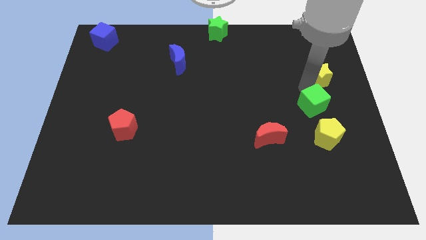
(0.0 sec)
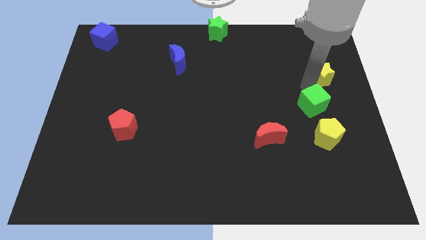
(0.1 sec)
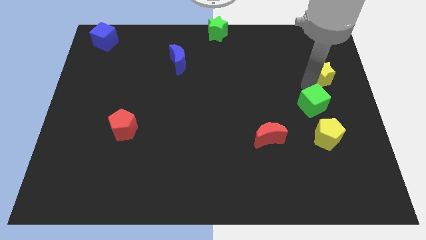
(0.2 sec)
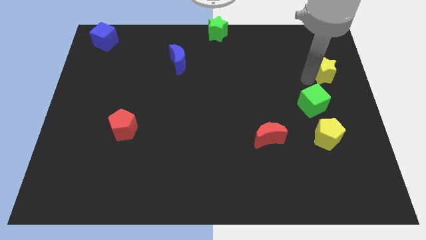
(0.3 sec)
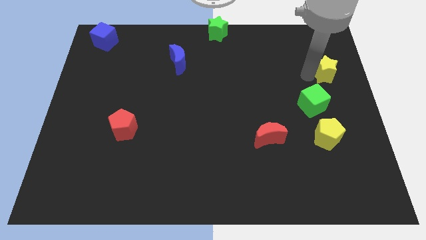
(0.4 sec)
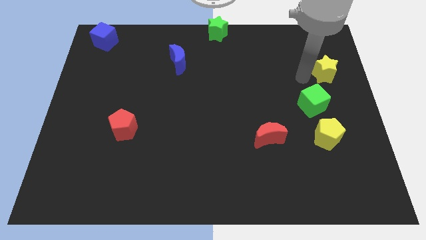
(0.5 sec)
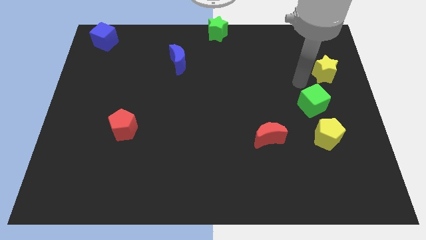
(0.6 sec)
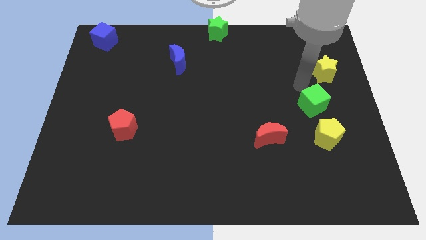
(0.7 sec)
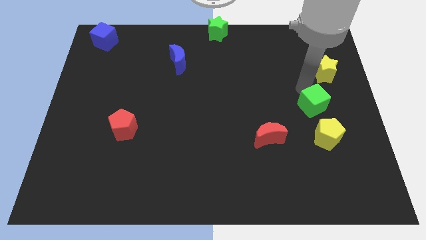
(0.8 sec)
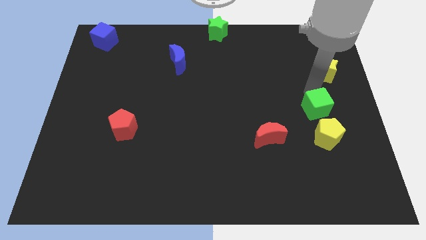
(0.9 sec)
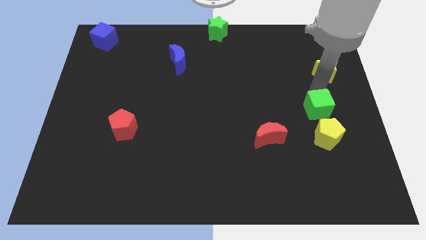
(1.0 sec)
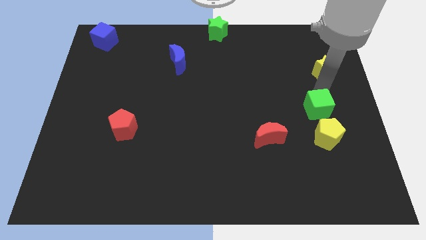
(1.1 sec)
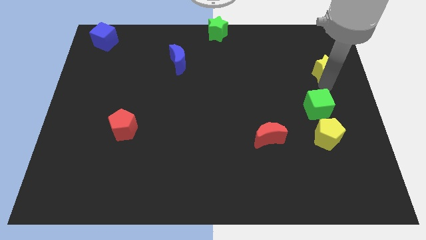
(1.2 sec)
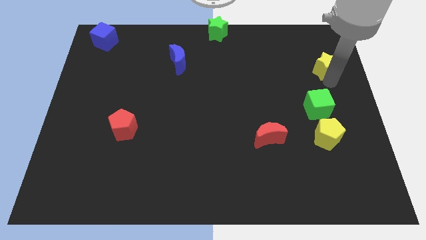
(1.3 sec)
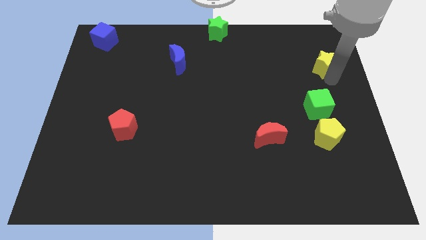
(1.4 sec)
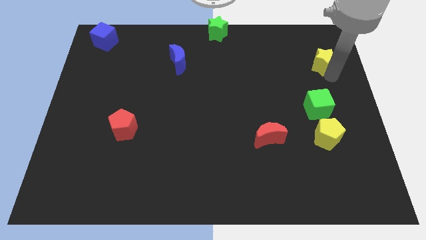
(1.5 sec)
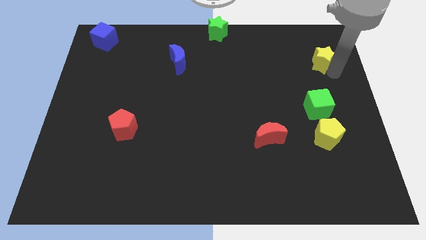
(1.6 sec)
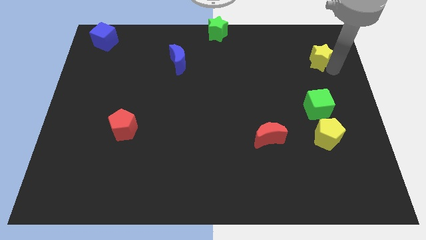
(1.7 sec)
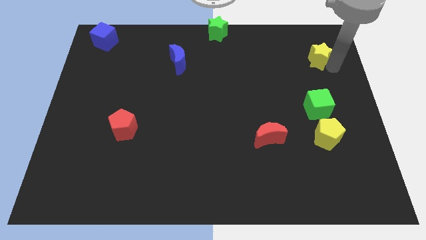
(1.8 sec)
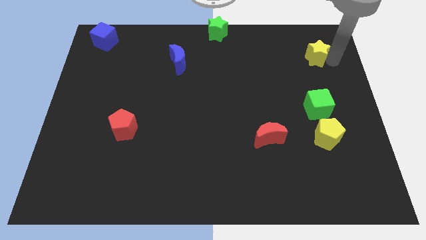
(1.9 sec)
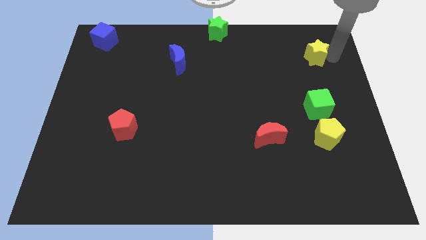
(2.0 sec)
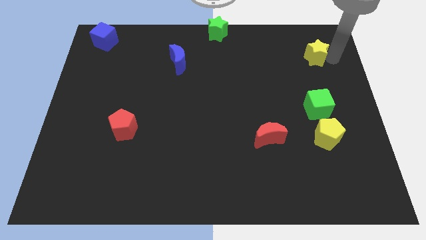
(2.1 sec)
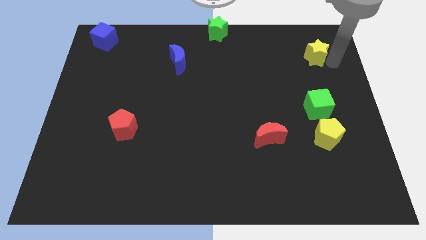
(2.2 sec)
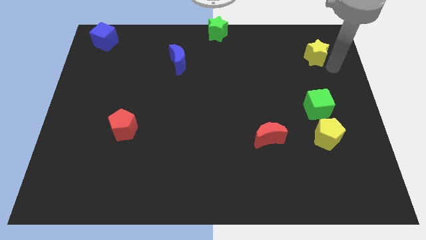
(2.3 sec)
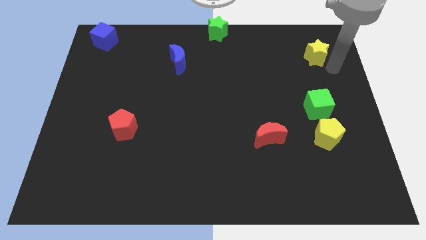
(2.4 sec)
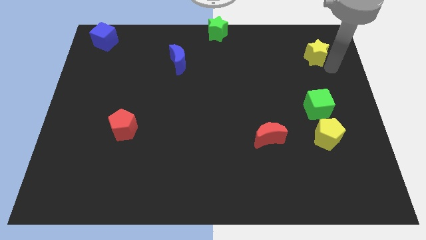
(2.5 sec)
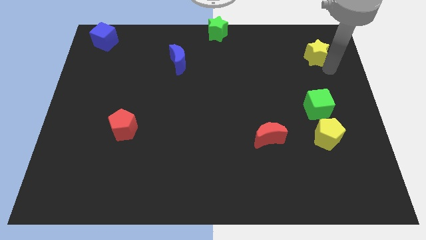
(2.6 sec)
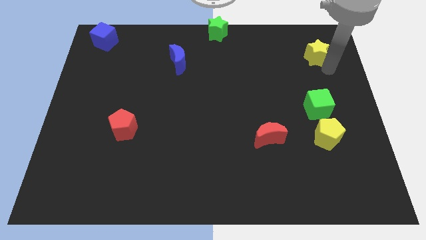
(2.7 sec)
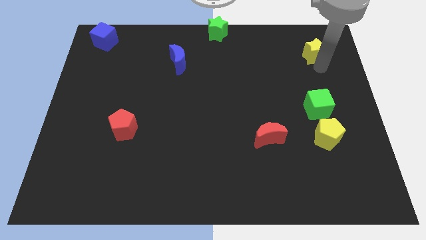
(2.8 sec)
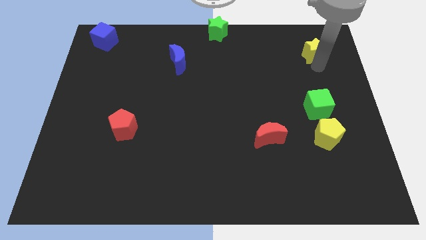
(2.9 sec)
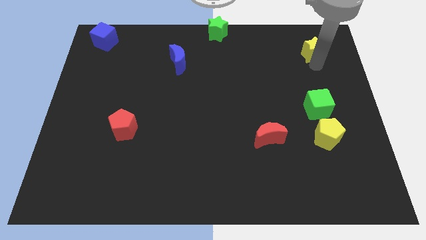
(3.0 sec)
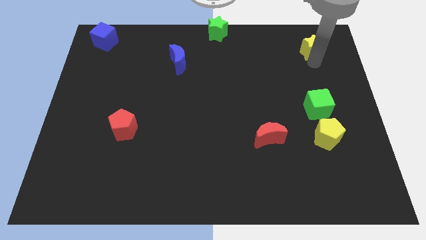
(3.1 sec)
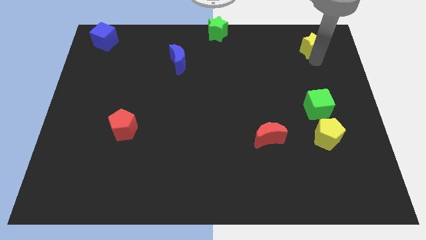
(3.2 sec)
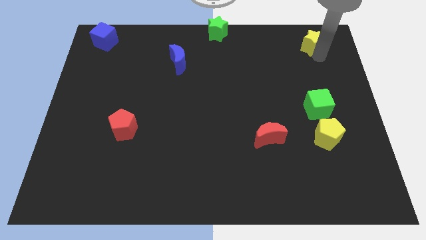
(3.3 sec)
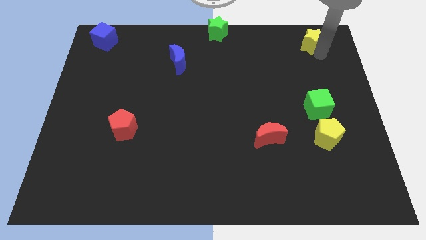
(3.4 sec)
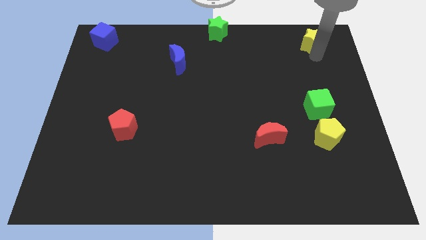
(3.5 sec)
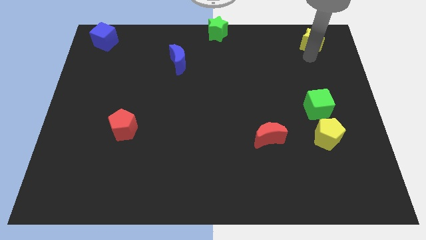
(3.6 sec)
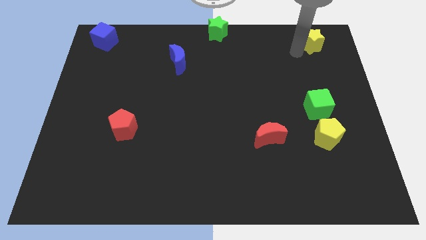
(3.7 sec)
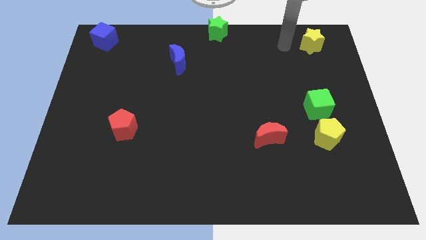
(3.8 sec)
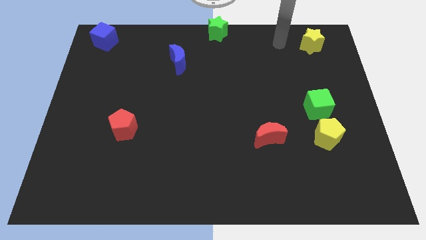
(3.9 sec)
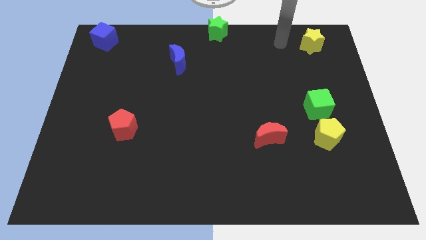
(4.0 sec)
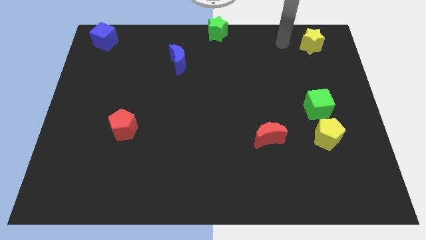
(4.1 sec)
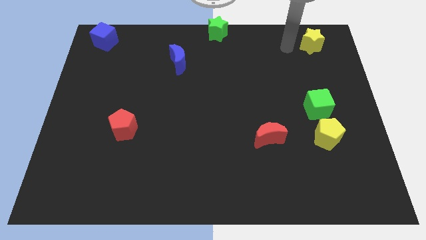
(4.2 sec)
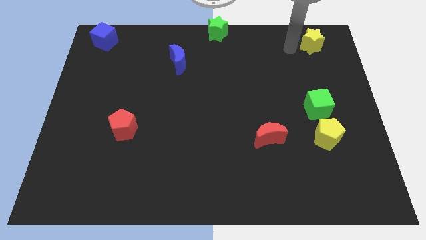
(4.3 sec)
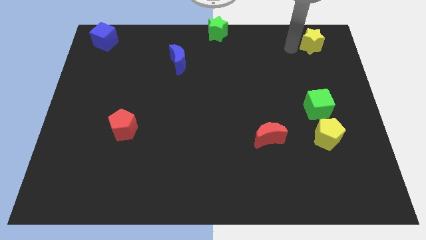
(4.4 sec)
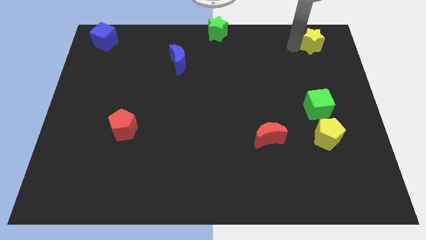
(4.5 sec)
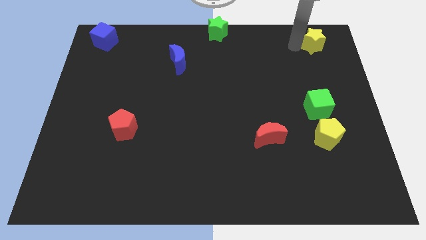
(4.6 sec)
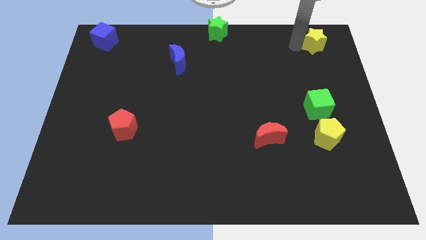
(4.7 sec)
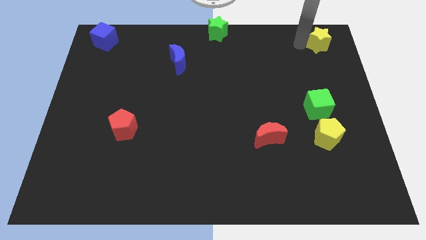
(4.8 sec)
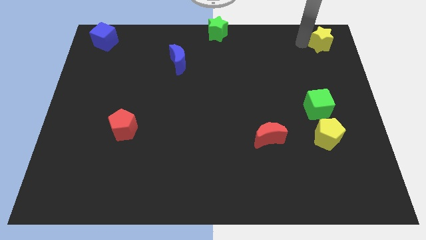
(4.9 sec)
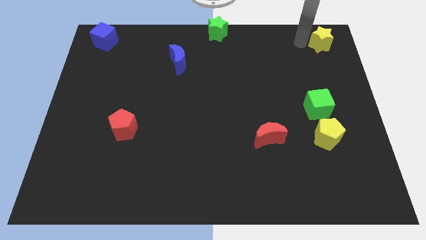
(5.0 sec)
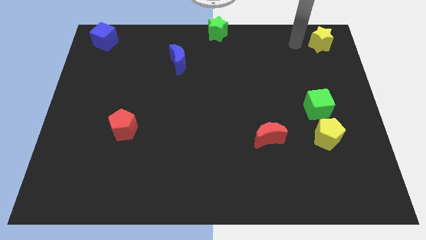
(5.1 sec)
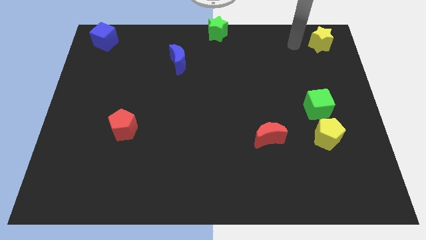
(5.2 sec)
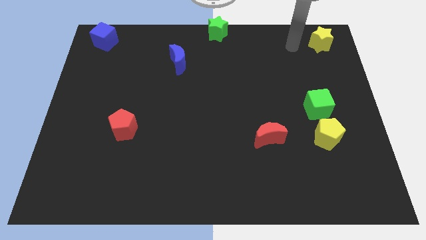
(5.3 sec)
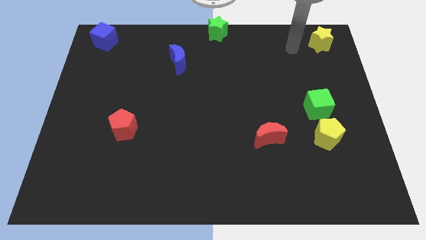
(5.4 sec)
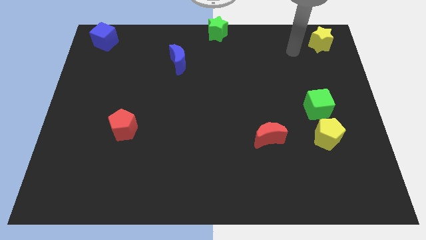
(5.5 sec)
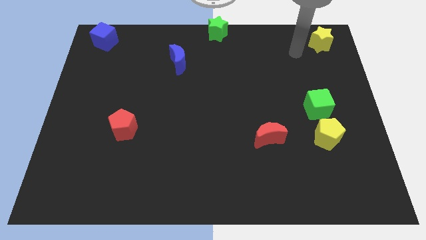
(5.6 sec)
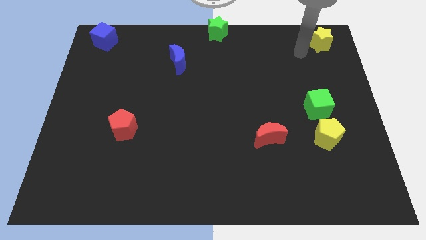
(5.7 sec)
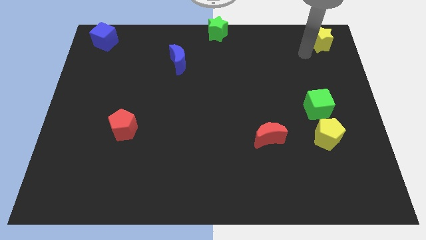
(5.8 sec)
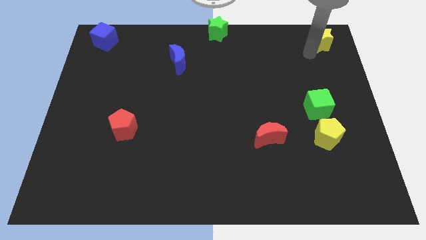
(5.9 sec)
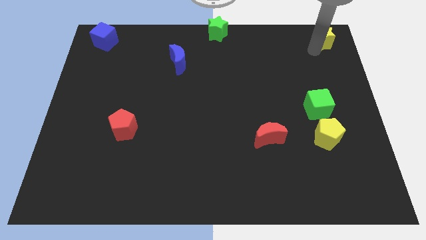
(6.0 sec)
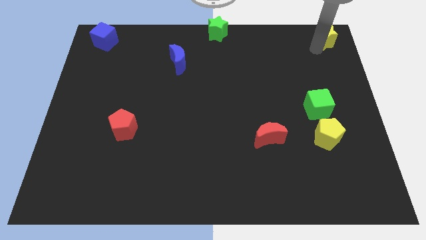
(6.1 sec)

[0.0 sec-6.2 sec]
push yellow start towards upside right end

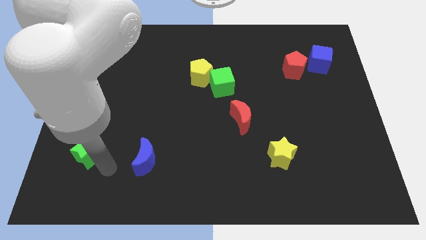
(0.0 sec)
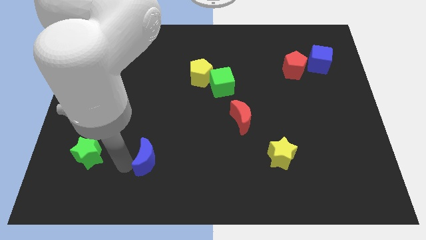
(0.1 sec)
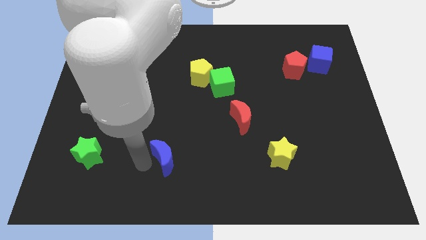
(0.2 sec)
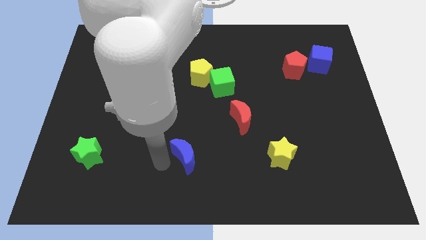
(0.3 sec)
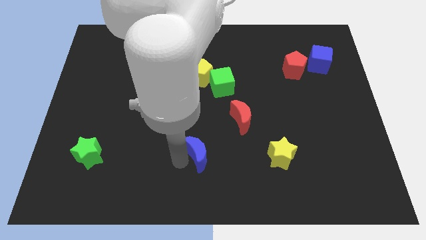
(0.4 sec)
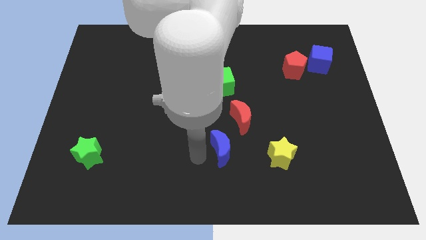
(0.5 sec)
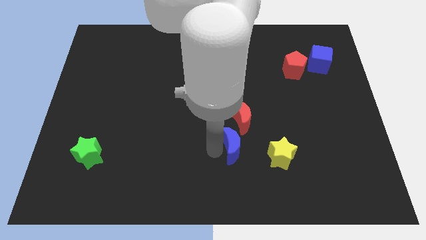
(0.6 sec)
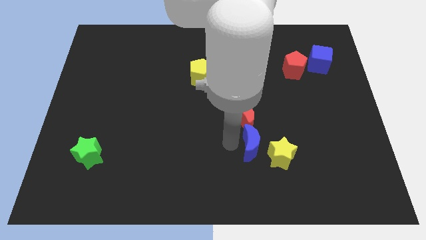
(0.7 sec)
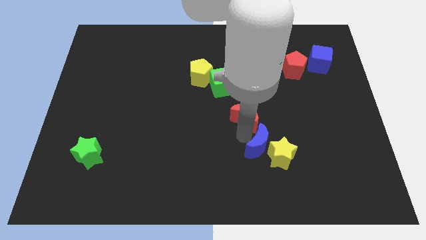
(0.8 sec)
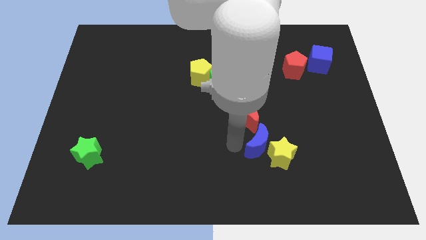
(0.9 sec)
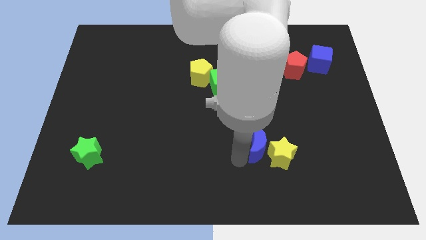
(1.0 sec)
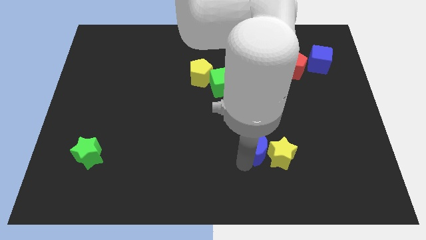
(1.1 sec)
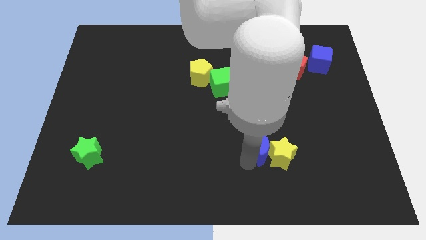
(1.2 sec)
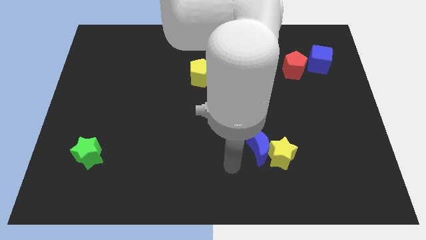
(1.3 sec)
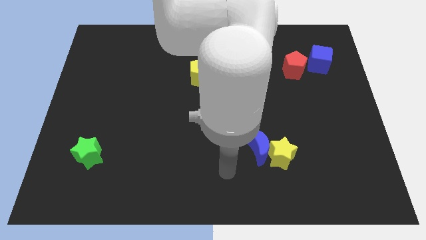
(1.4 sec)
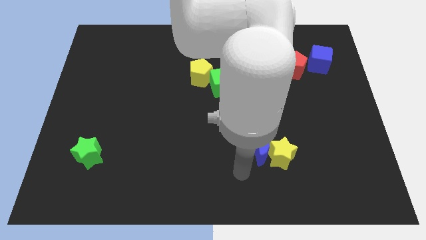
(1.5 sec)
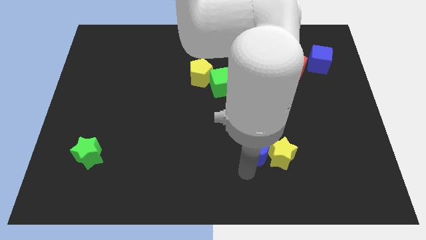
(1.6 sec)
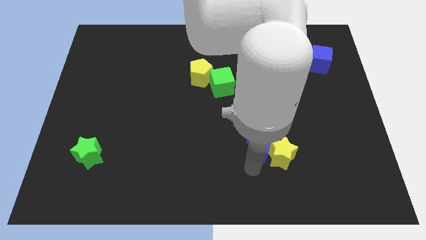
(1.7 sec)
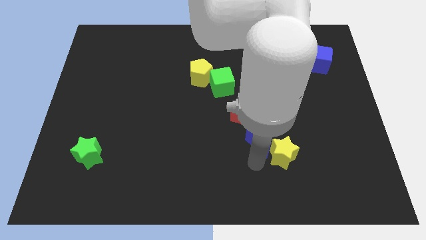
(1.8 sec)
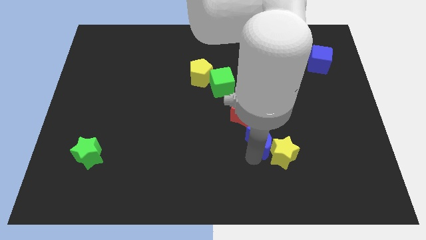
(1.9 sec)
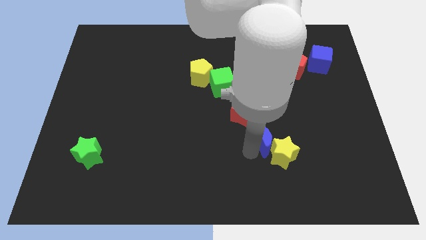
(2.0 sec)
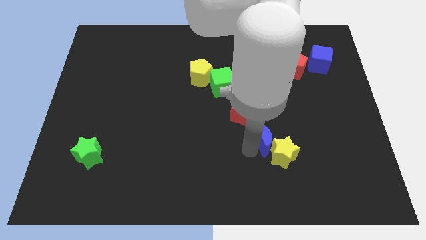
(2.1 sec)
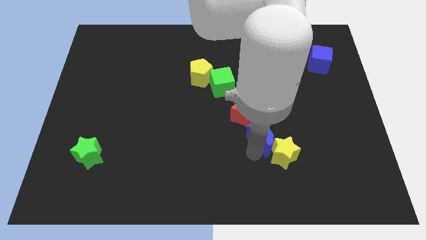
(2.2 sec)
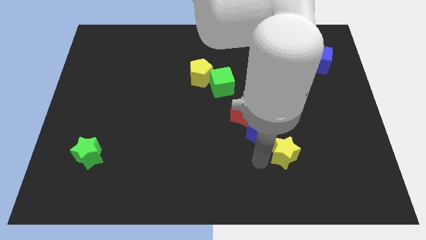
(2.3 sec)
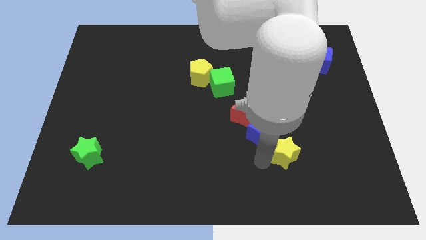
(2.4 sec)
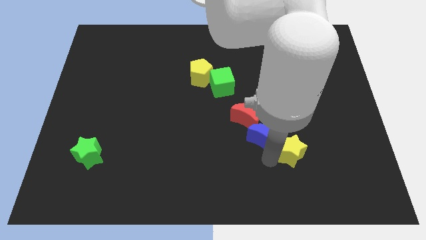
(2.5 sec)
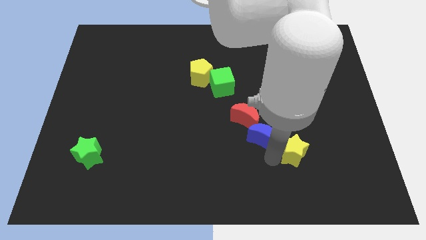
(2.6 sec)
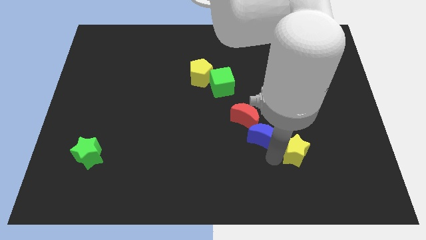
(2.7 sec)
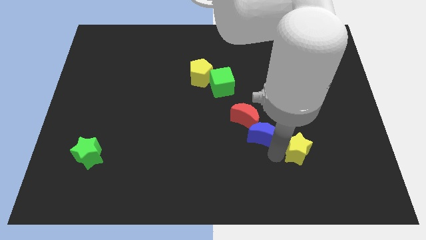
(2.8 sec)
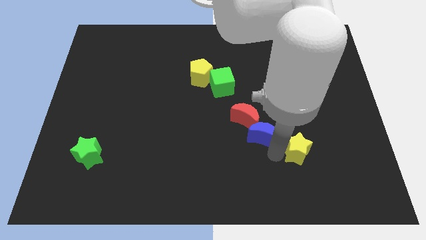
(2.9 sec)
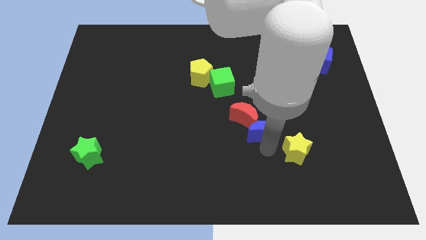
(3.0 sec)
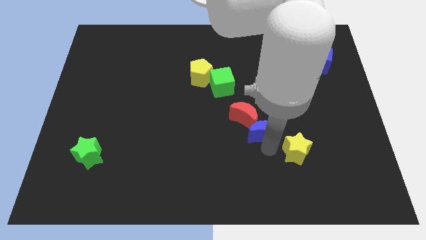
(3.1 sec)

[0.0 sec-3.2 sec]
push the blue crescent into the red crescent
